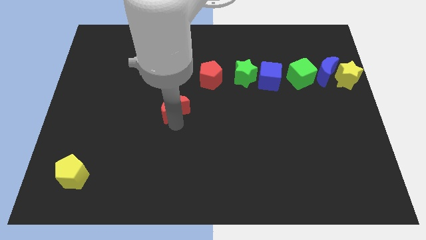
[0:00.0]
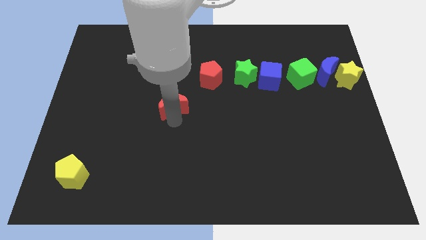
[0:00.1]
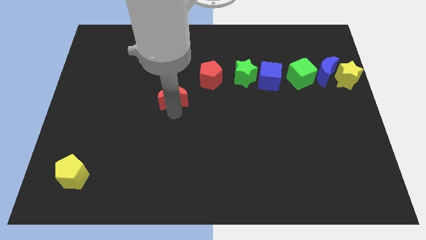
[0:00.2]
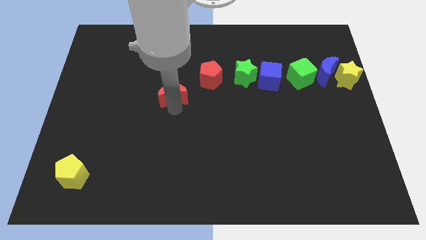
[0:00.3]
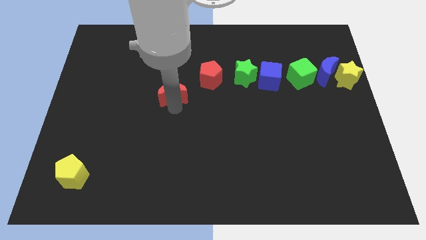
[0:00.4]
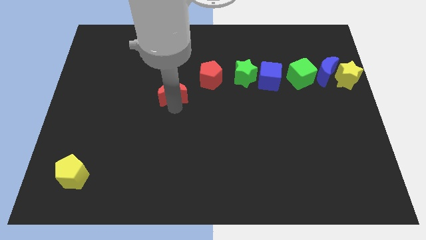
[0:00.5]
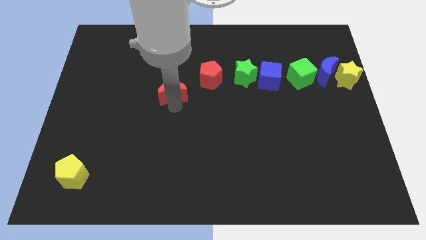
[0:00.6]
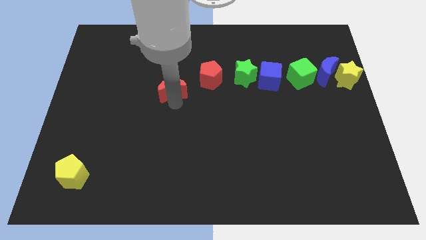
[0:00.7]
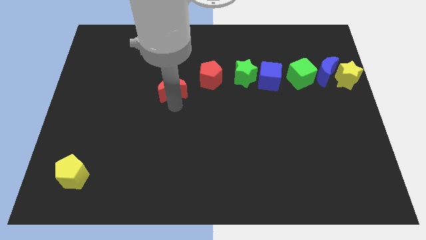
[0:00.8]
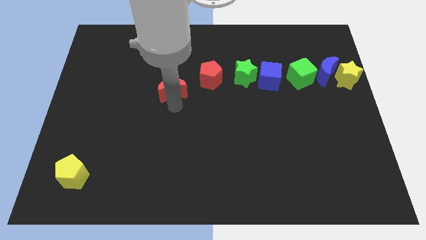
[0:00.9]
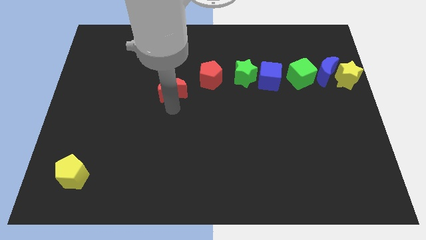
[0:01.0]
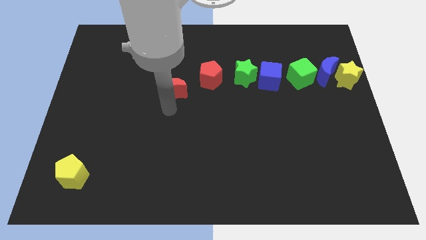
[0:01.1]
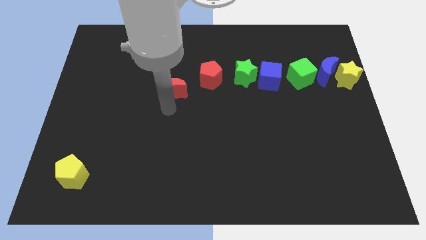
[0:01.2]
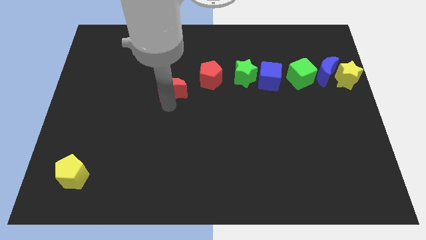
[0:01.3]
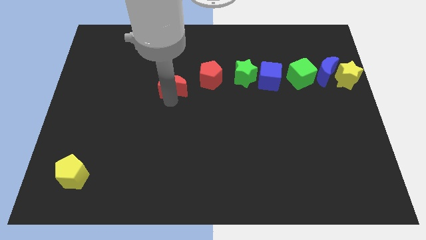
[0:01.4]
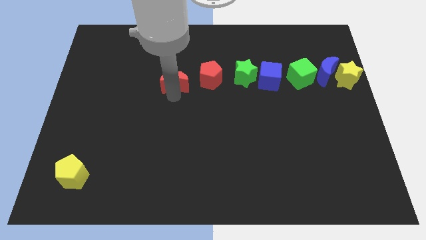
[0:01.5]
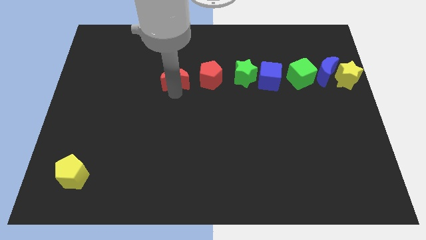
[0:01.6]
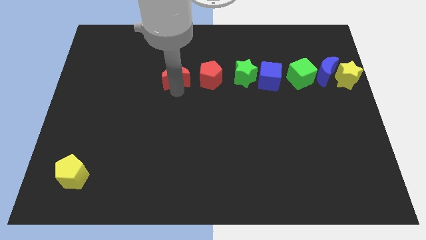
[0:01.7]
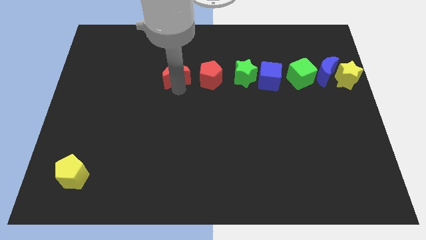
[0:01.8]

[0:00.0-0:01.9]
put the red crescent to the left of the red pentagon to form a horizontal line of blocks

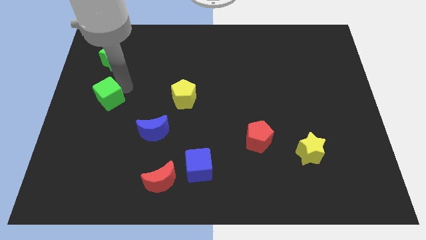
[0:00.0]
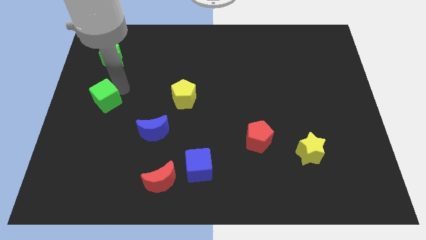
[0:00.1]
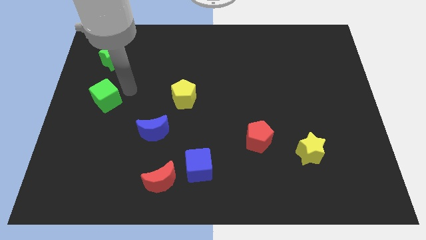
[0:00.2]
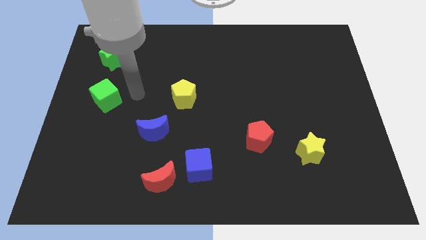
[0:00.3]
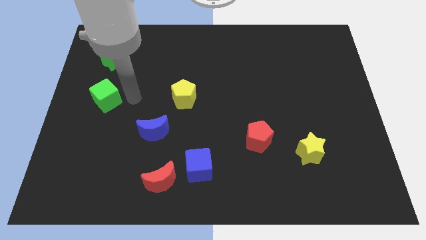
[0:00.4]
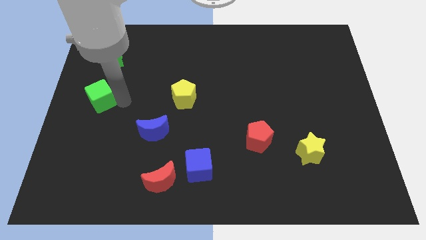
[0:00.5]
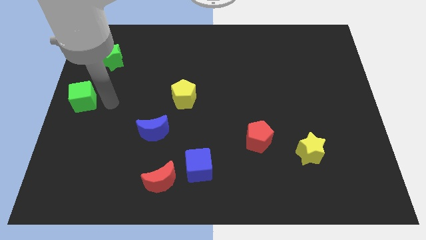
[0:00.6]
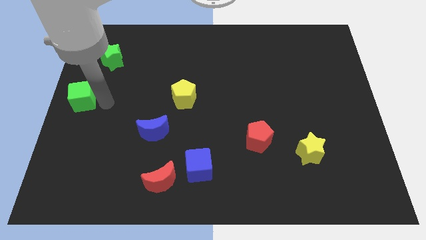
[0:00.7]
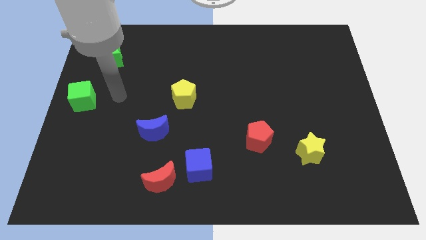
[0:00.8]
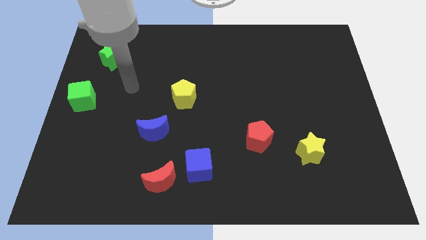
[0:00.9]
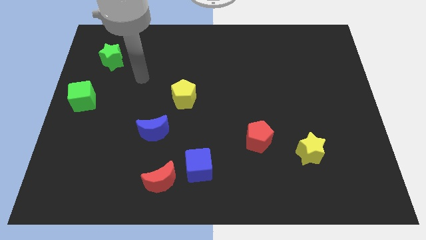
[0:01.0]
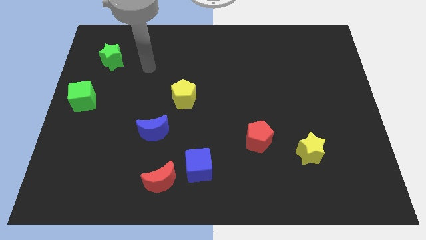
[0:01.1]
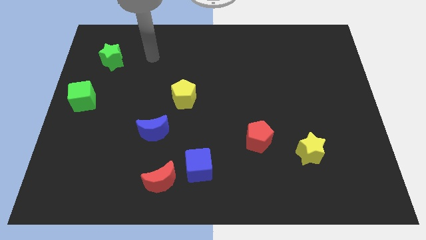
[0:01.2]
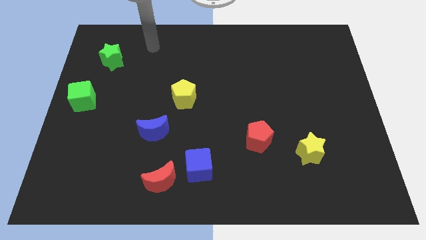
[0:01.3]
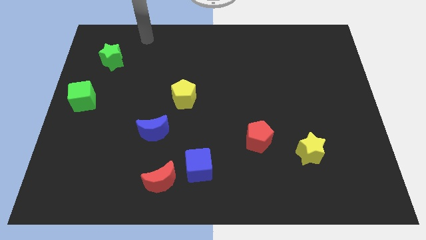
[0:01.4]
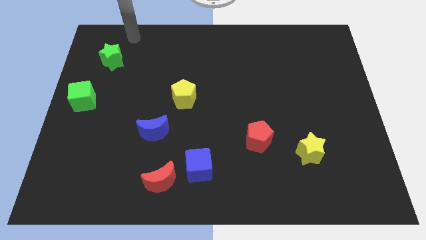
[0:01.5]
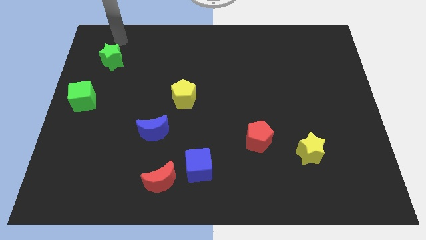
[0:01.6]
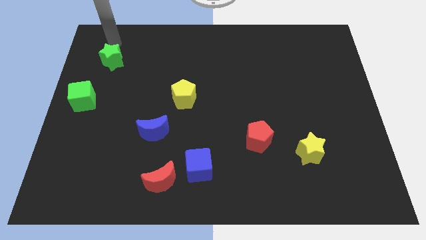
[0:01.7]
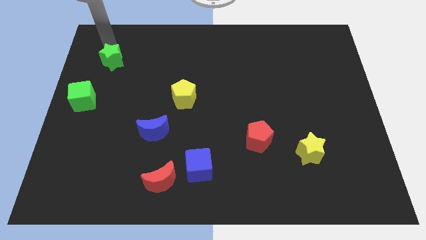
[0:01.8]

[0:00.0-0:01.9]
slide the green cube diagonally bottom left to the green star

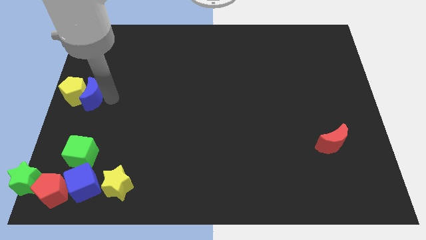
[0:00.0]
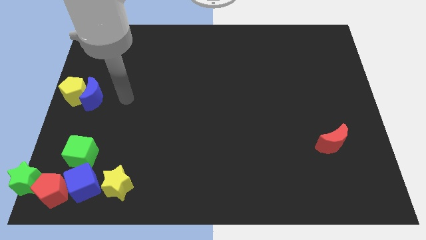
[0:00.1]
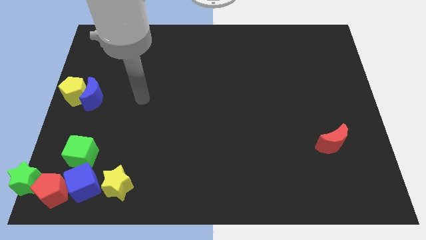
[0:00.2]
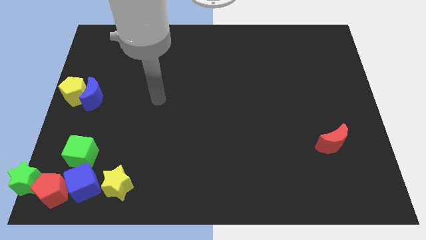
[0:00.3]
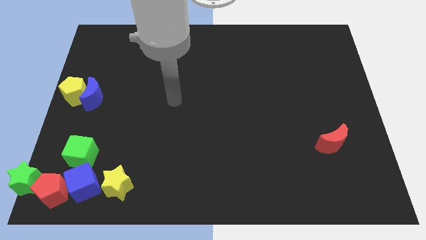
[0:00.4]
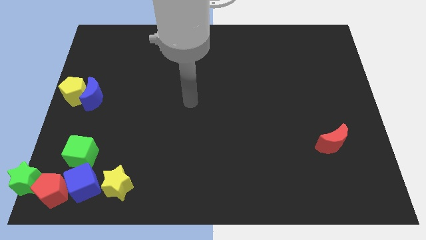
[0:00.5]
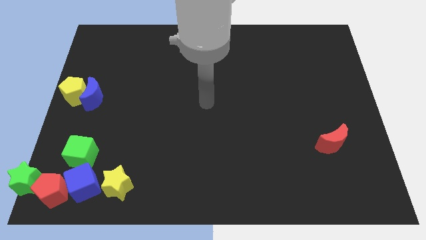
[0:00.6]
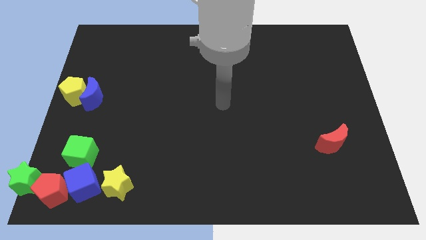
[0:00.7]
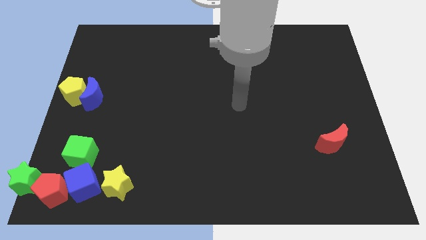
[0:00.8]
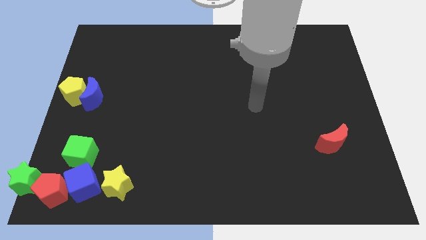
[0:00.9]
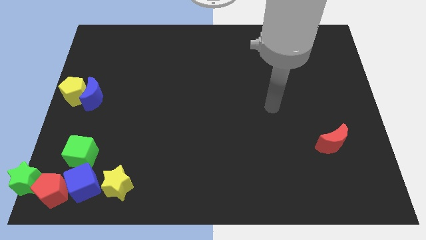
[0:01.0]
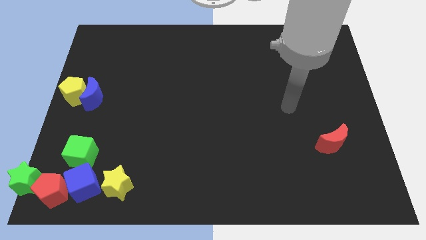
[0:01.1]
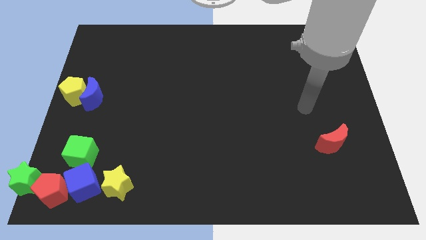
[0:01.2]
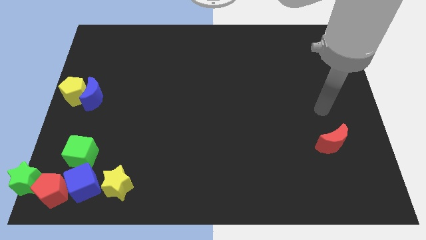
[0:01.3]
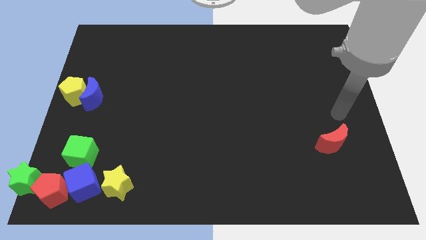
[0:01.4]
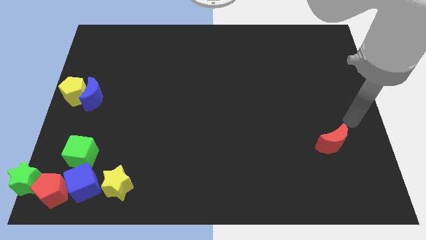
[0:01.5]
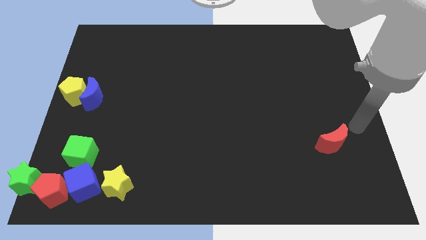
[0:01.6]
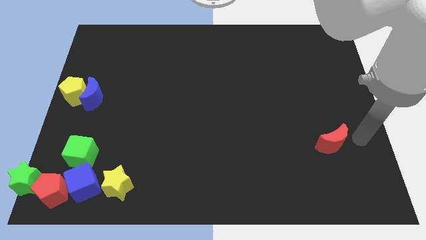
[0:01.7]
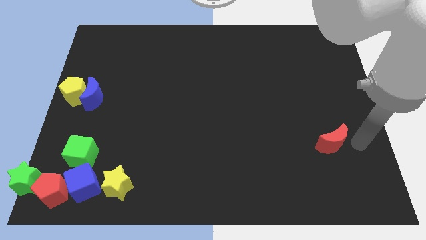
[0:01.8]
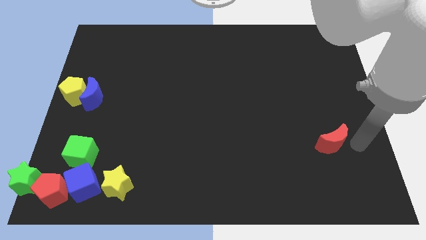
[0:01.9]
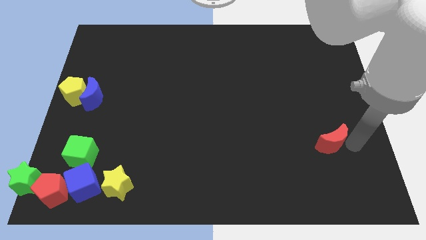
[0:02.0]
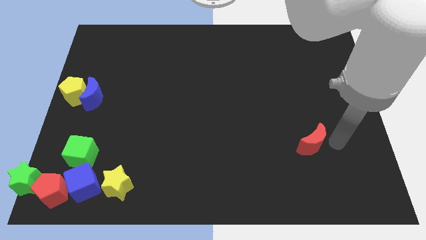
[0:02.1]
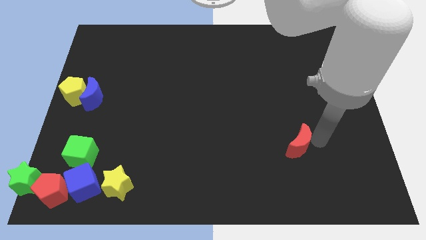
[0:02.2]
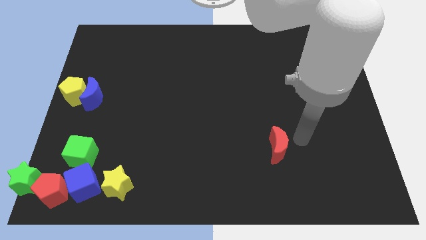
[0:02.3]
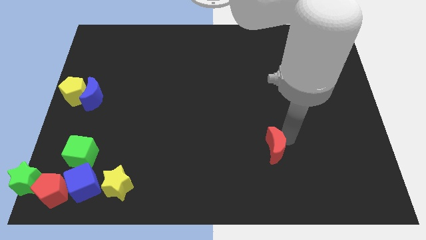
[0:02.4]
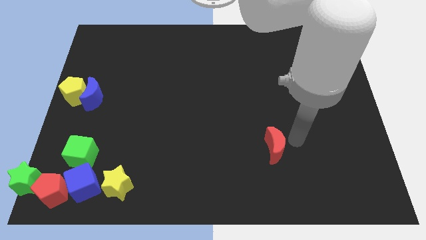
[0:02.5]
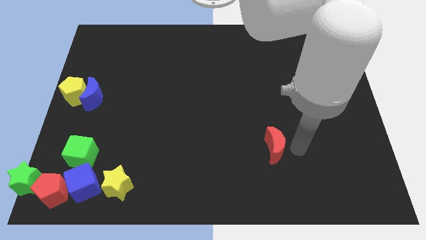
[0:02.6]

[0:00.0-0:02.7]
move your arm into the red crescent

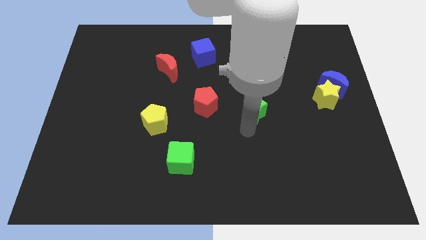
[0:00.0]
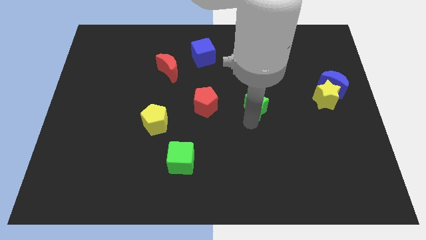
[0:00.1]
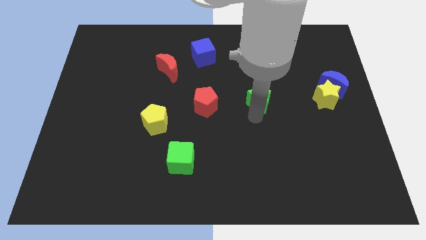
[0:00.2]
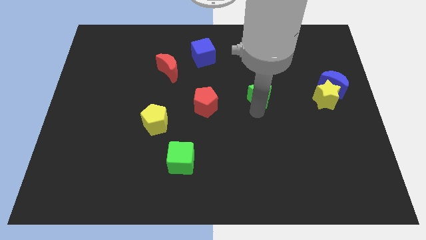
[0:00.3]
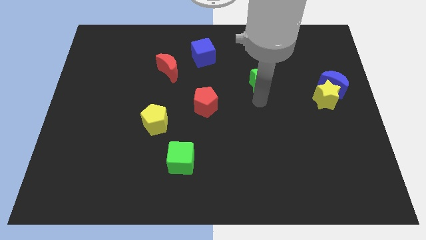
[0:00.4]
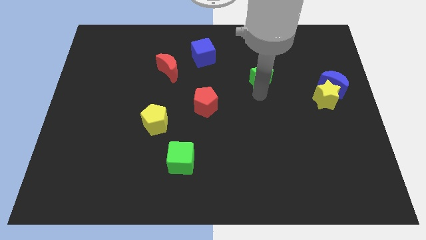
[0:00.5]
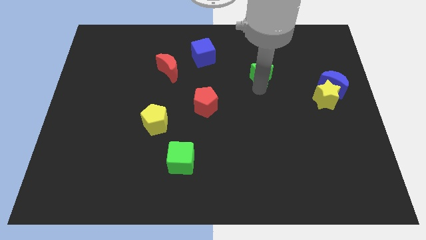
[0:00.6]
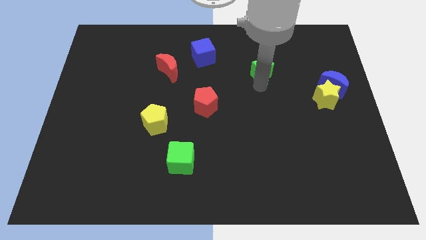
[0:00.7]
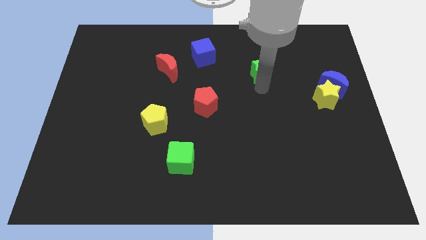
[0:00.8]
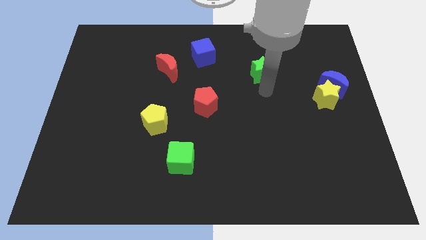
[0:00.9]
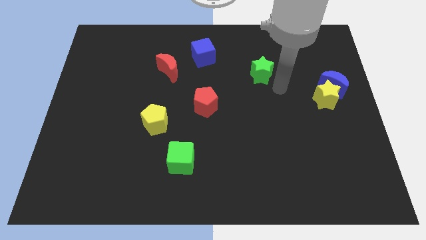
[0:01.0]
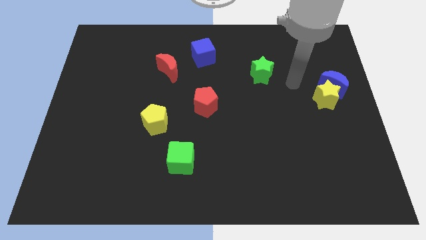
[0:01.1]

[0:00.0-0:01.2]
move the green star towards up a bit

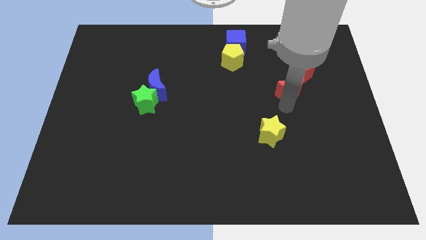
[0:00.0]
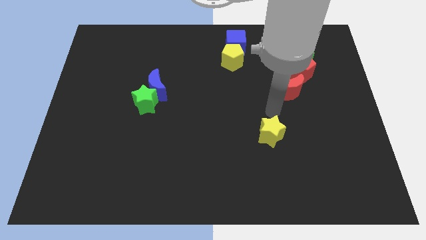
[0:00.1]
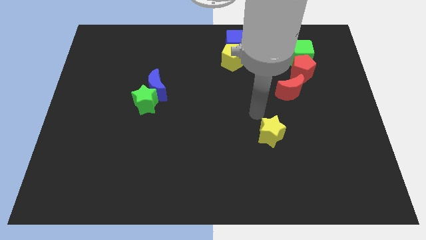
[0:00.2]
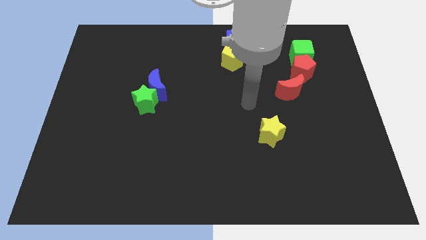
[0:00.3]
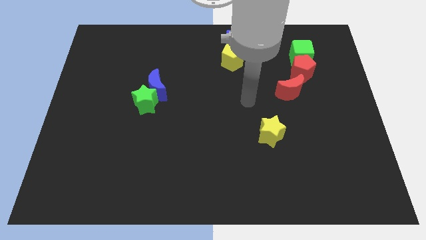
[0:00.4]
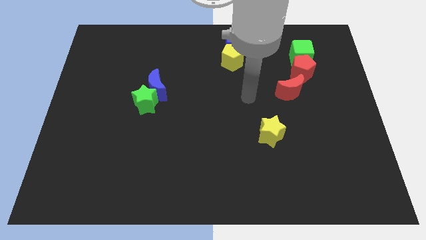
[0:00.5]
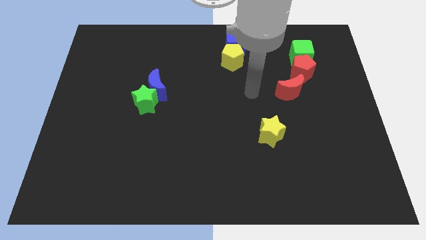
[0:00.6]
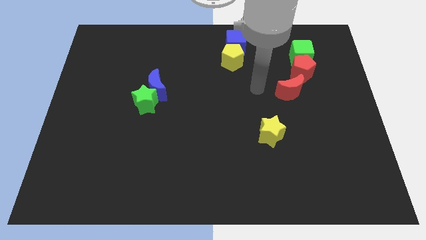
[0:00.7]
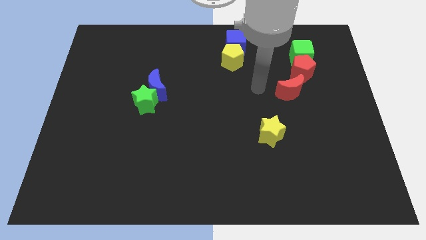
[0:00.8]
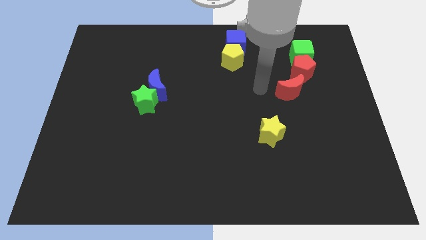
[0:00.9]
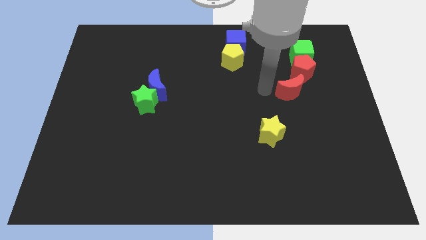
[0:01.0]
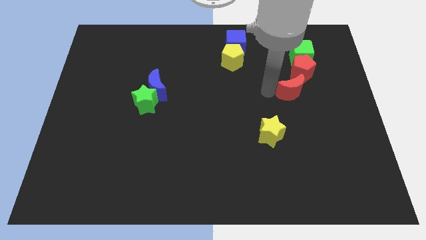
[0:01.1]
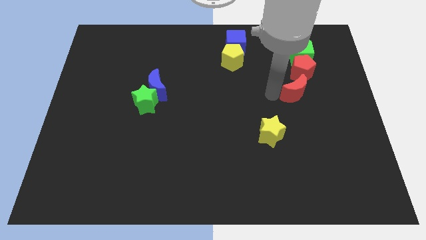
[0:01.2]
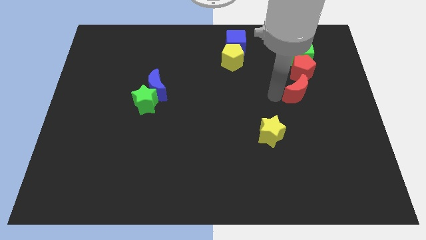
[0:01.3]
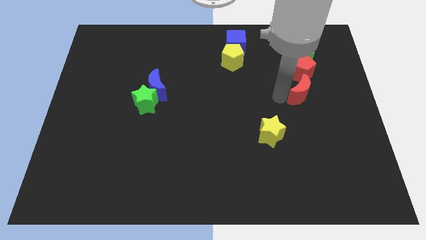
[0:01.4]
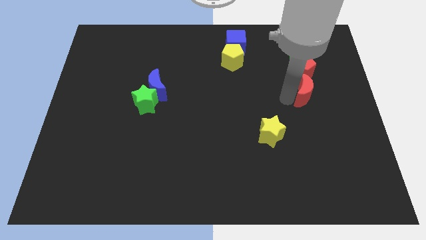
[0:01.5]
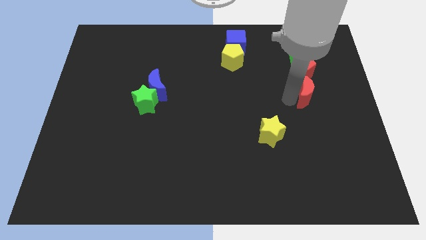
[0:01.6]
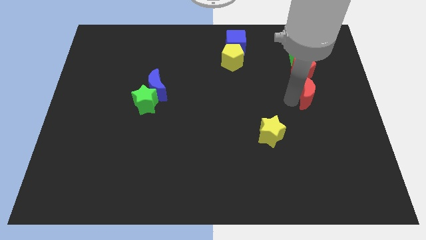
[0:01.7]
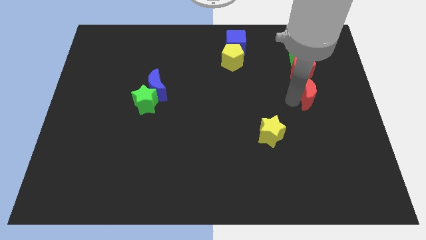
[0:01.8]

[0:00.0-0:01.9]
move red moon below the red pentagon
